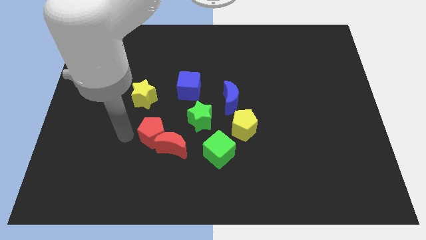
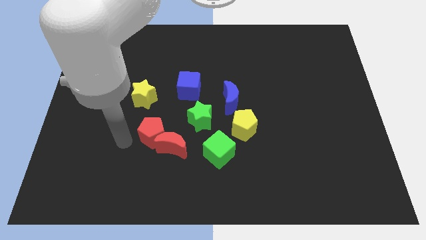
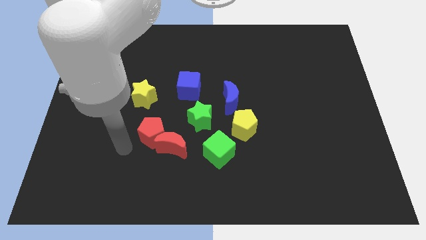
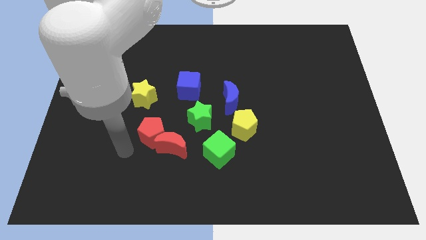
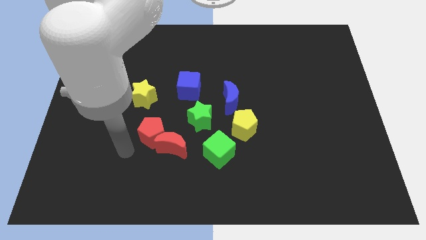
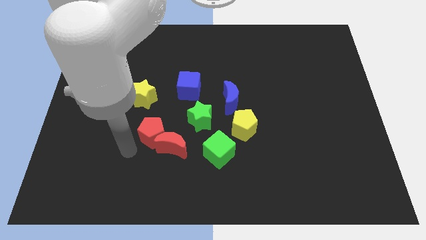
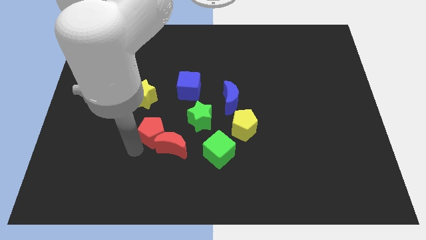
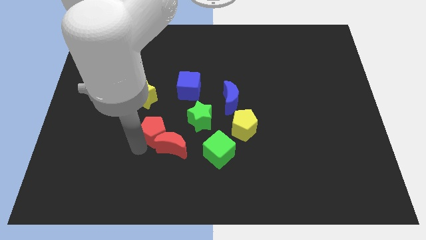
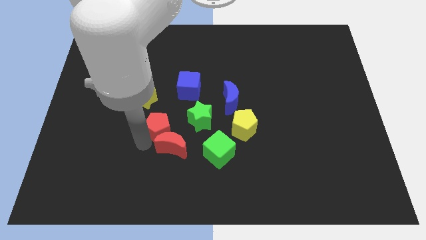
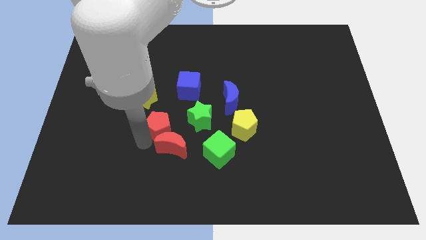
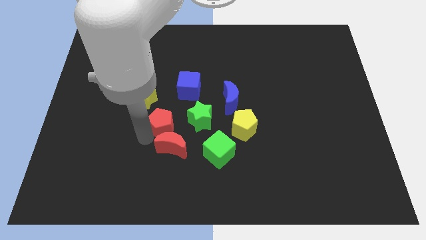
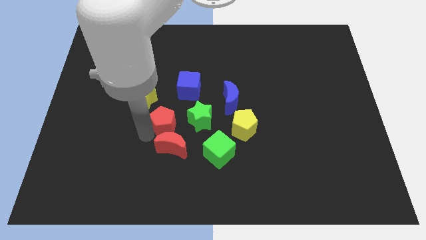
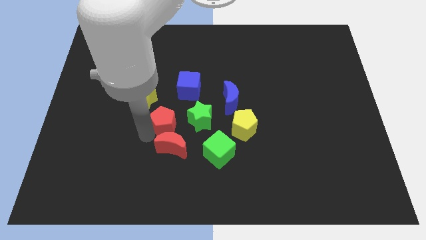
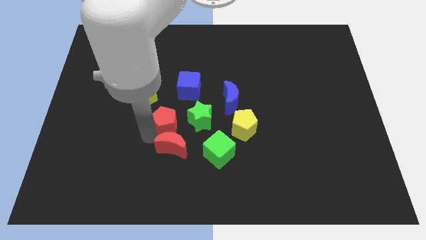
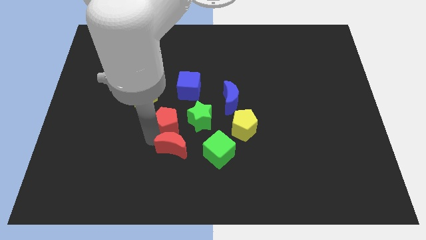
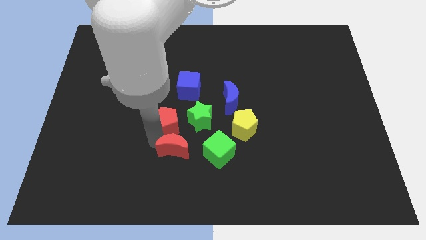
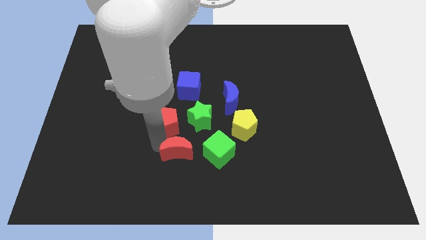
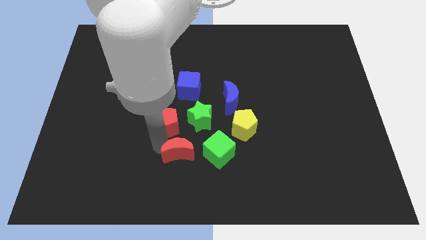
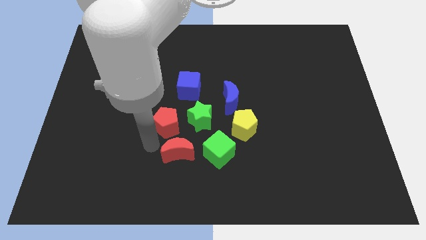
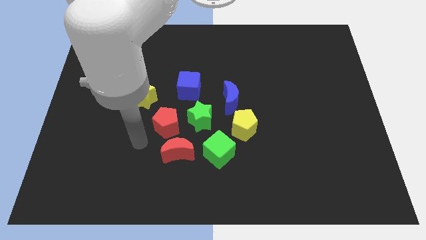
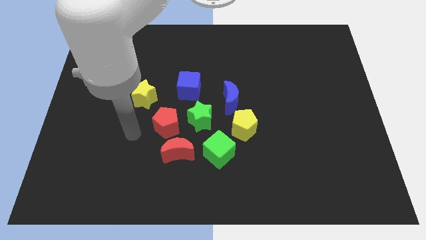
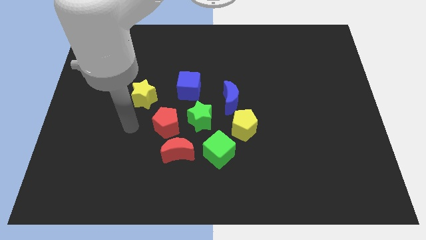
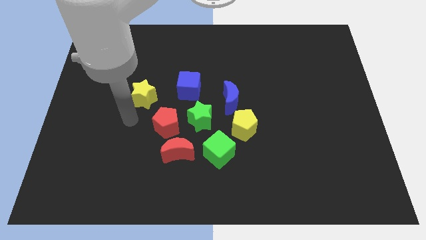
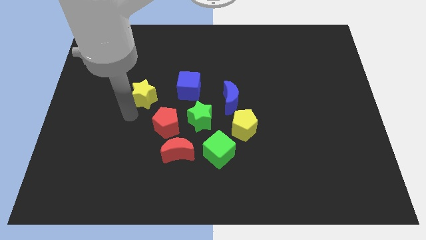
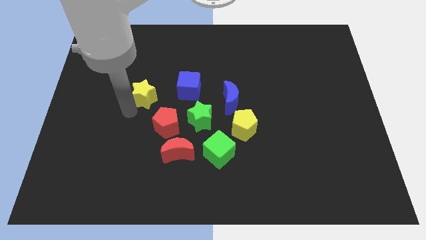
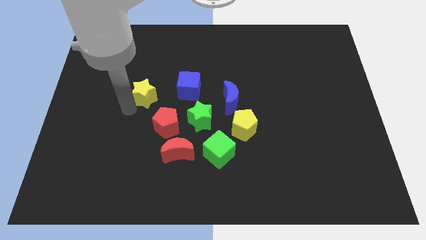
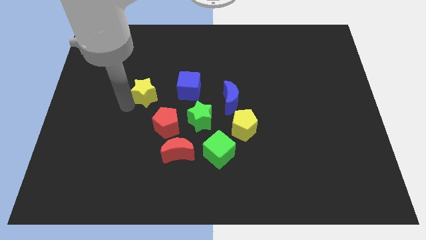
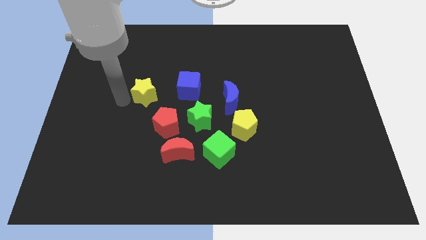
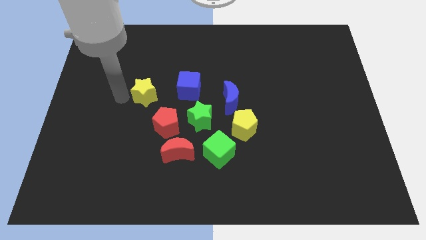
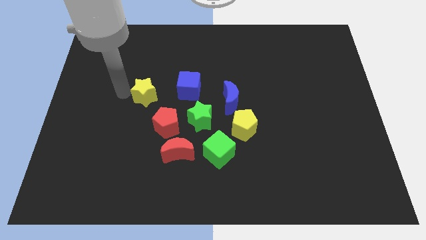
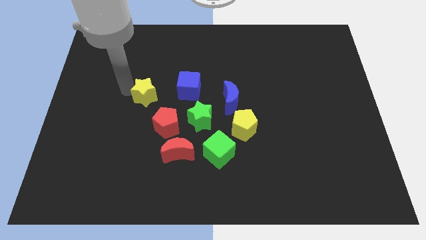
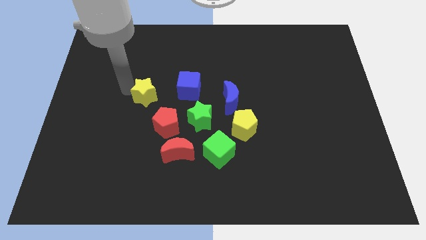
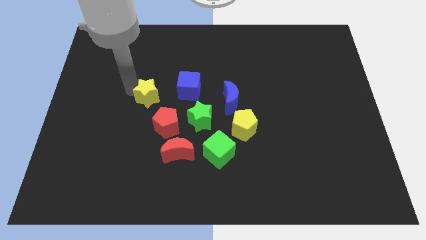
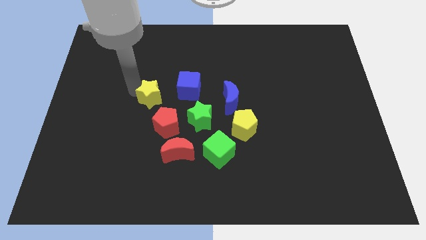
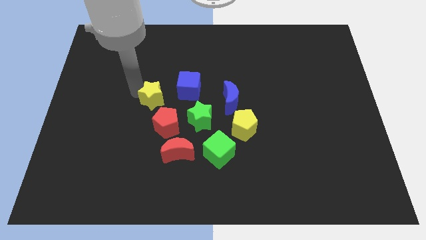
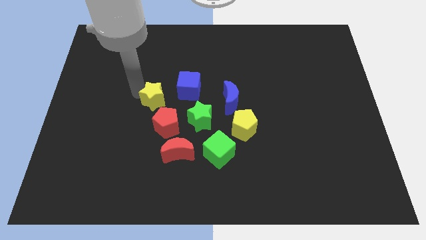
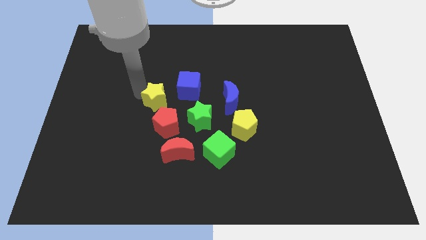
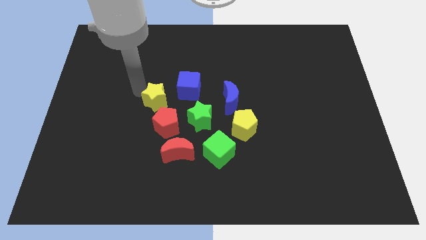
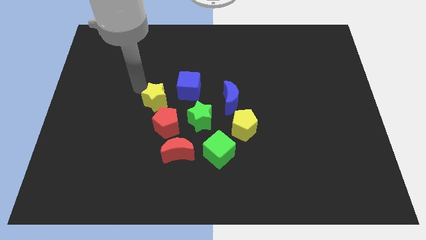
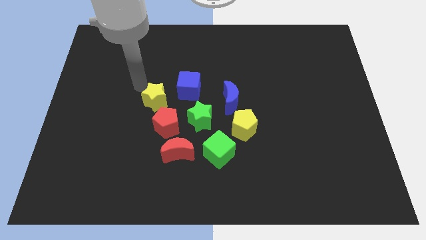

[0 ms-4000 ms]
place the red blocks and yellow star diagonal to each other

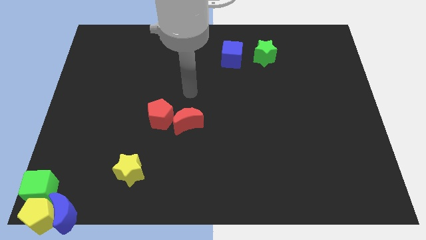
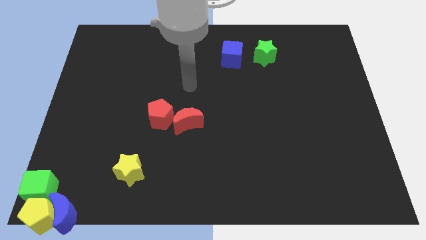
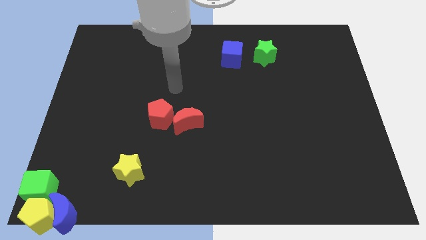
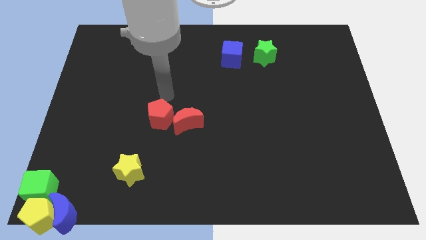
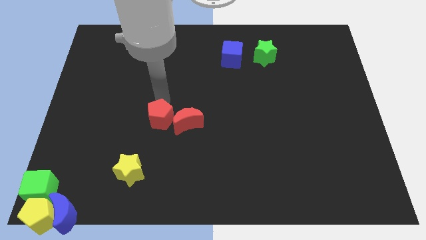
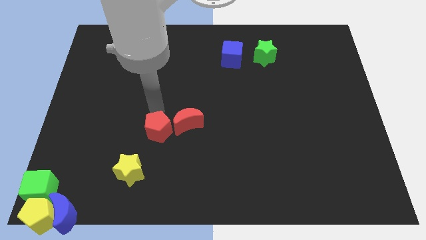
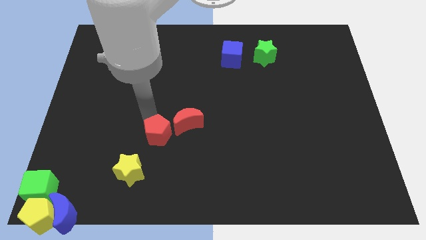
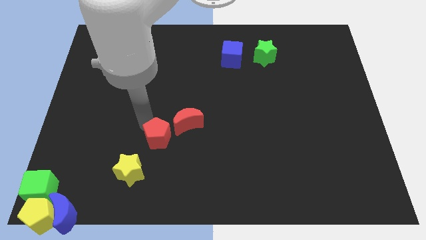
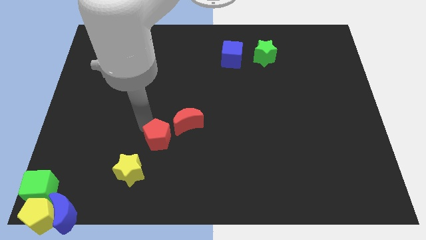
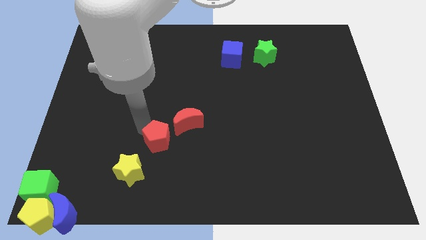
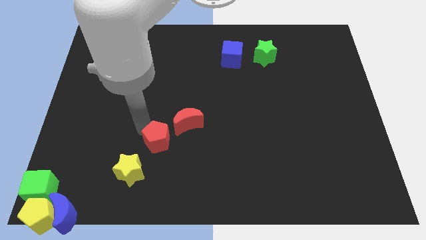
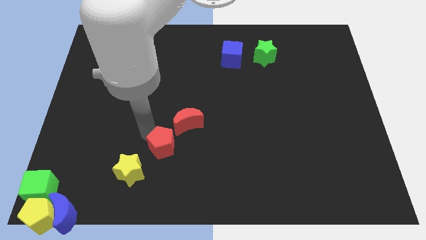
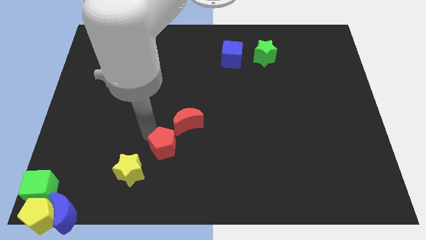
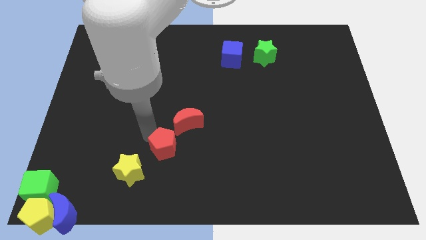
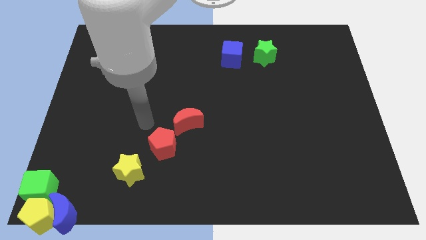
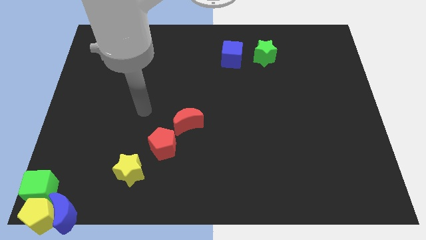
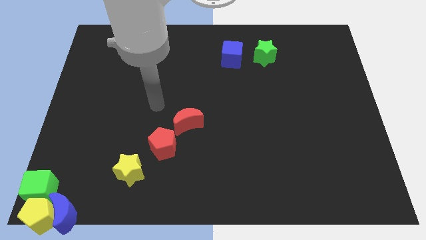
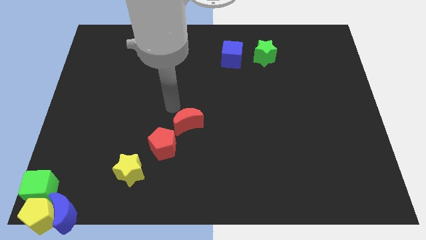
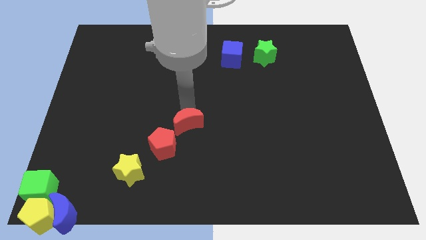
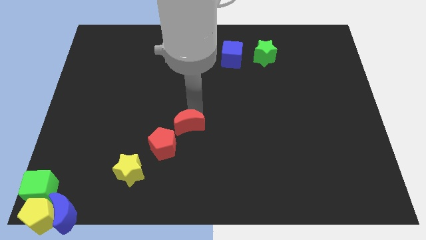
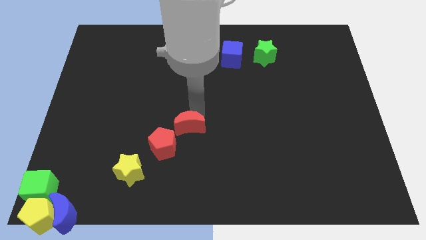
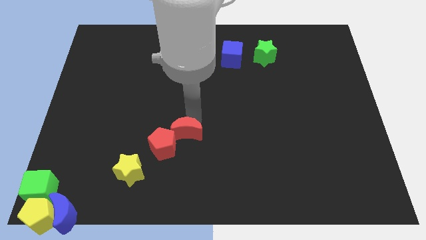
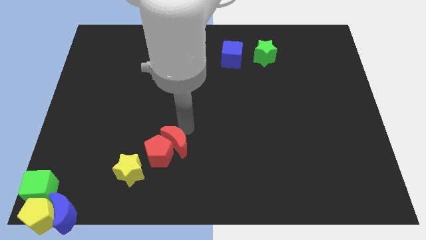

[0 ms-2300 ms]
place the red blocks together at the top right side of the yellow star

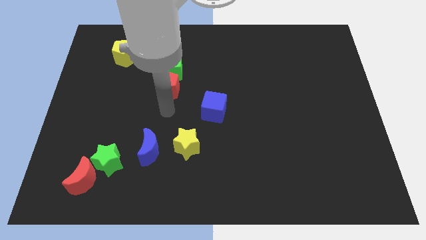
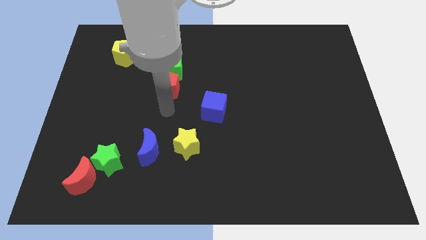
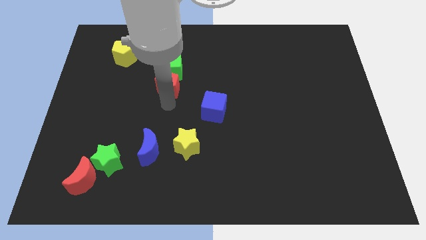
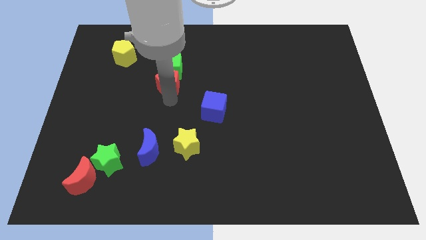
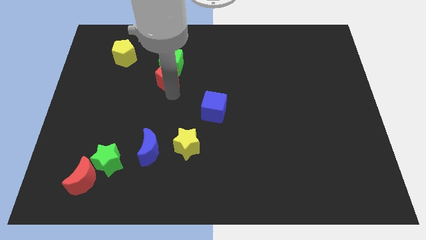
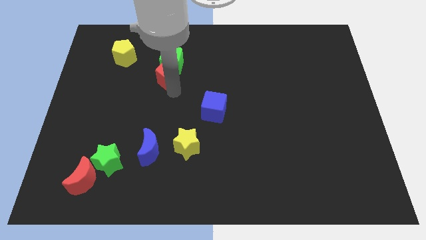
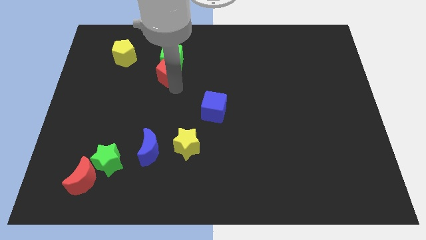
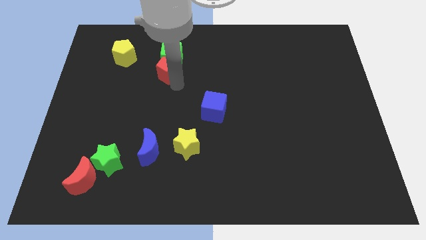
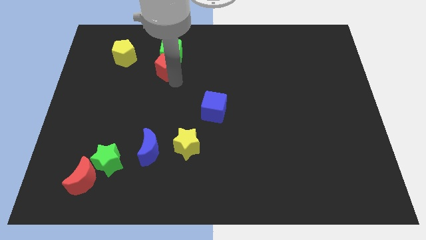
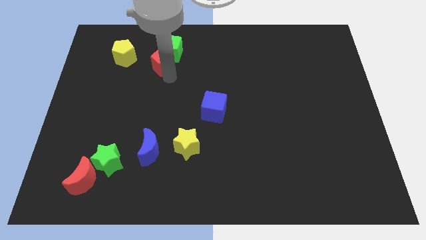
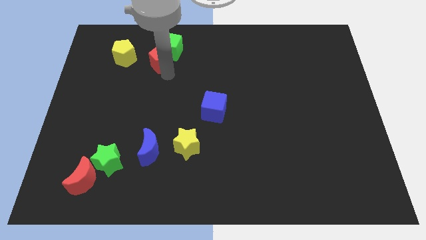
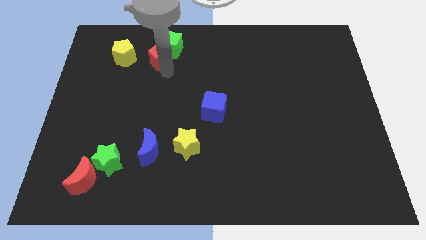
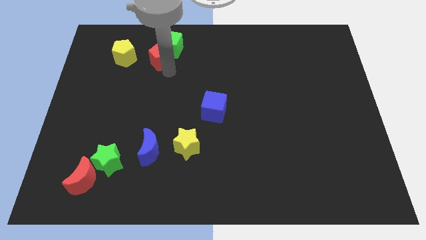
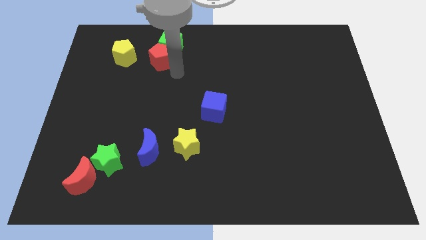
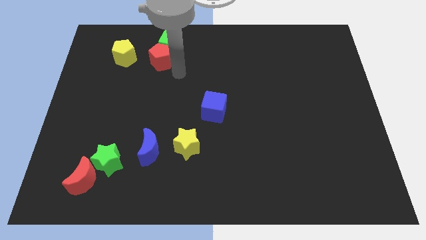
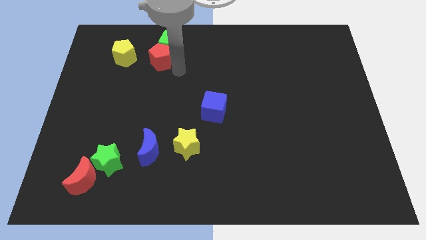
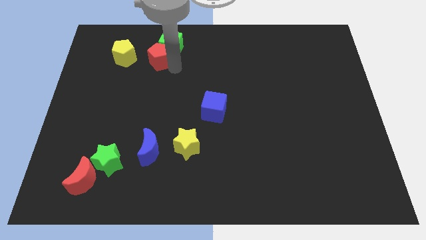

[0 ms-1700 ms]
move both the red pentagon and green cube to the top center of the board

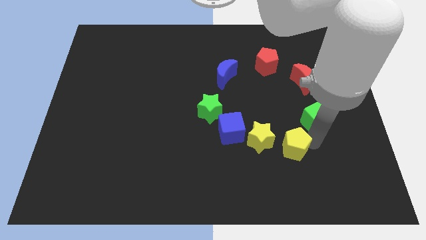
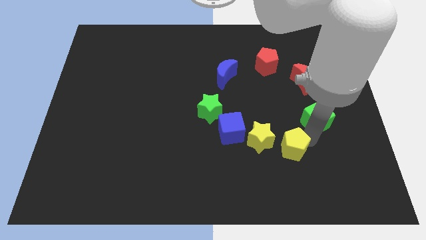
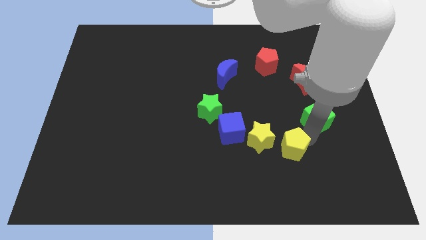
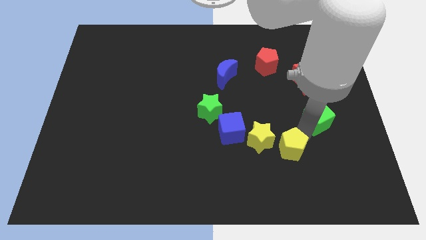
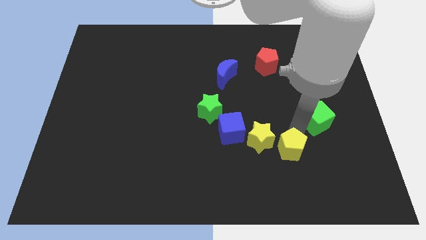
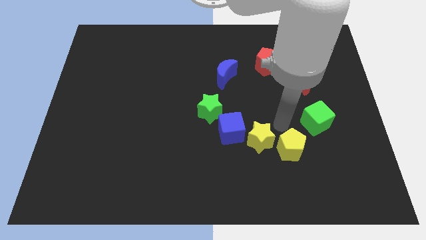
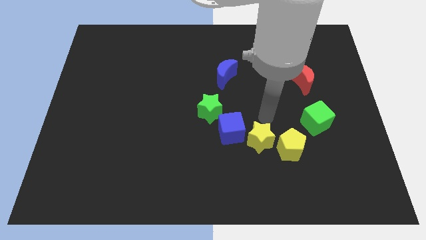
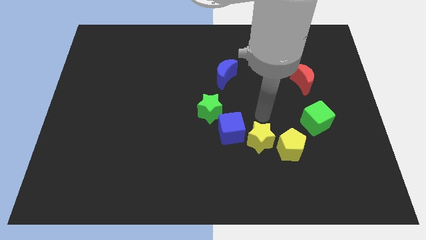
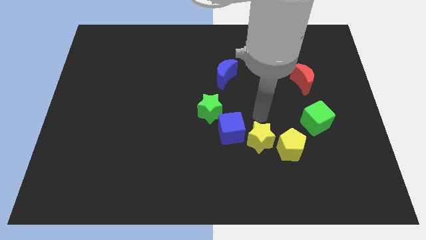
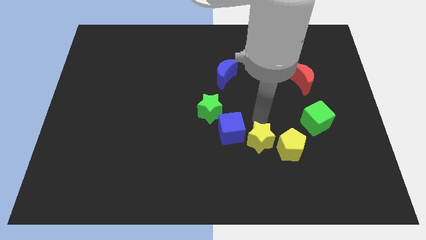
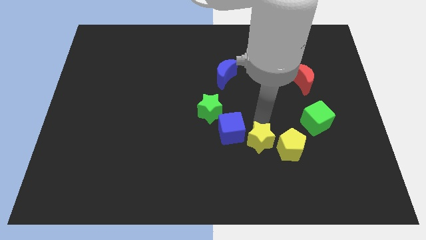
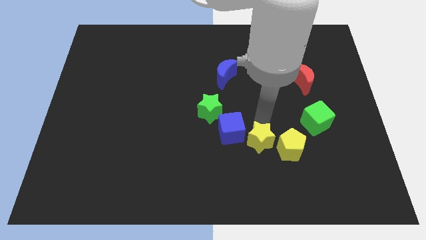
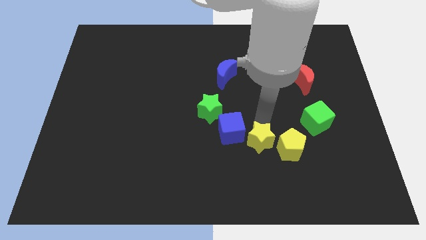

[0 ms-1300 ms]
push the yellow pentagon closer to the yellow star
